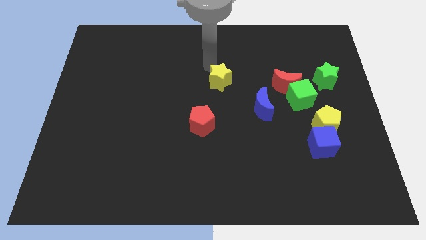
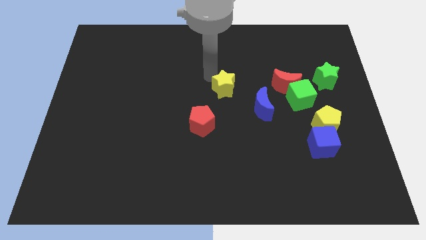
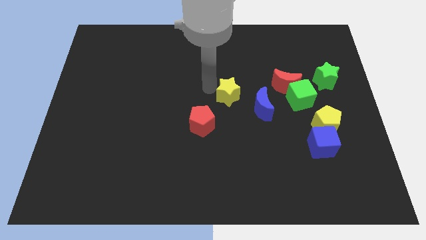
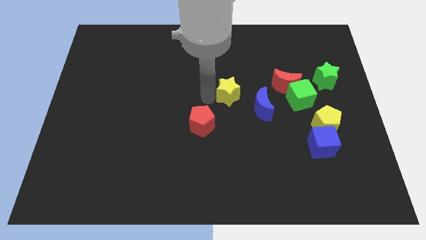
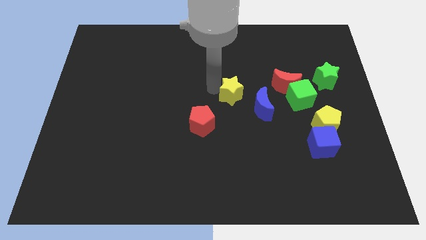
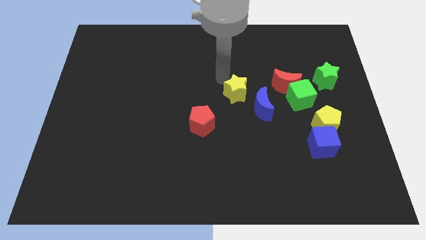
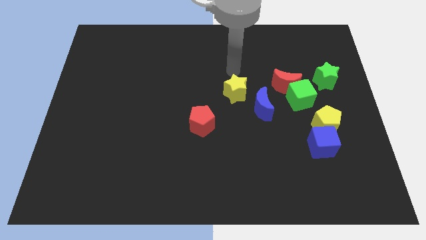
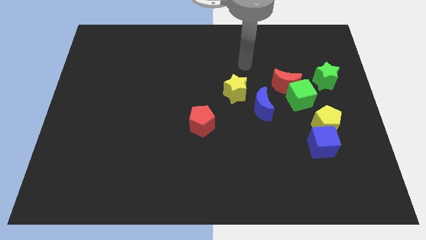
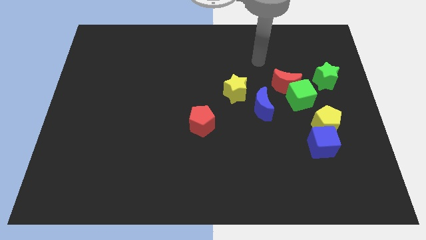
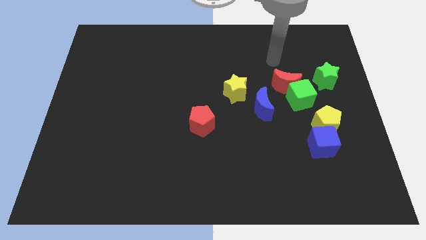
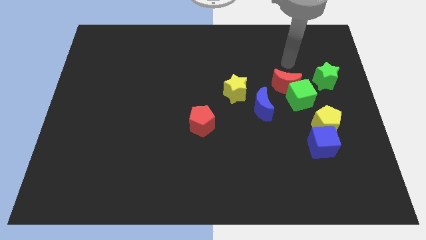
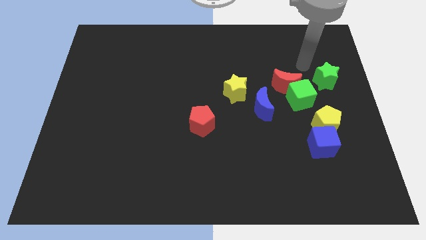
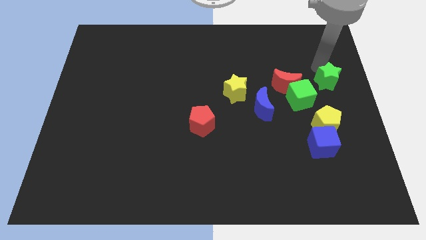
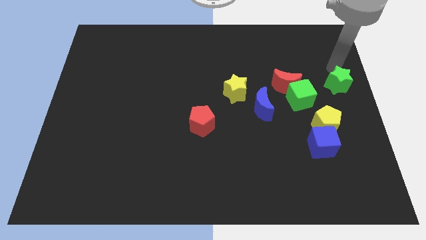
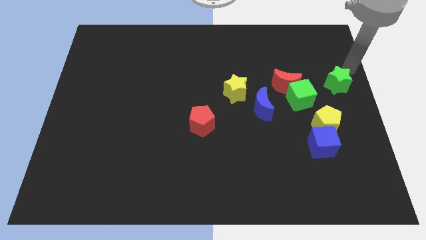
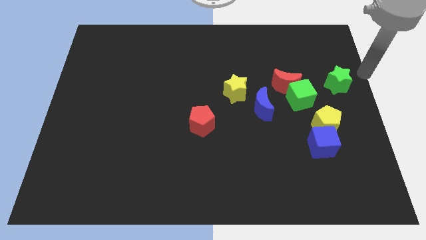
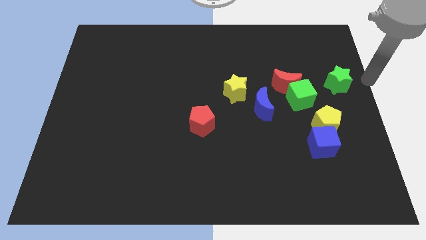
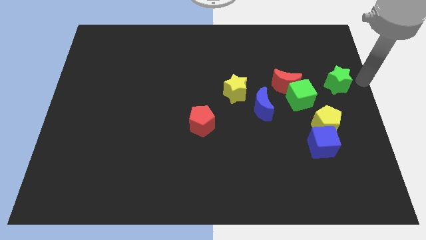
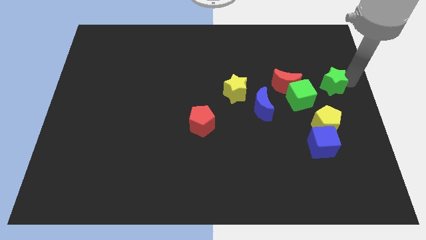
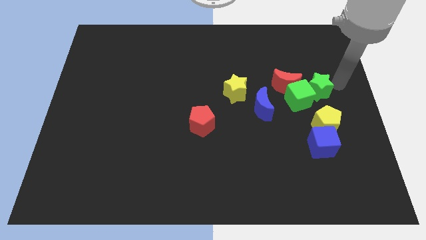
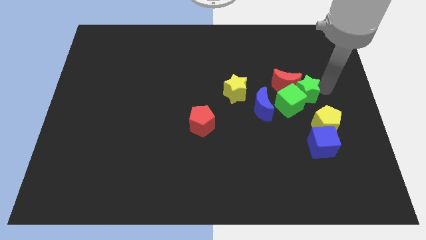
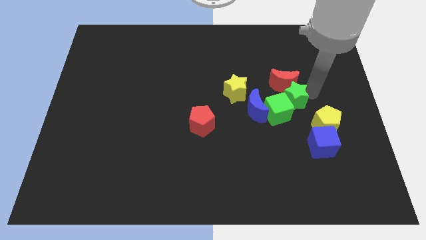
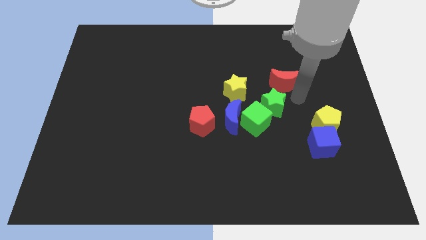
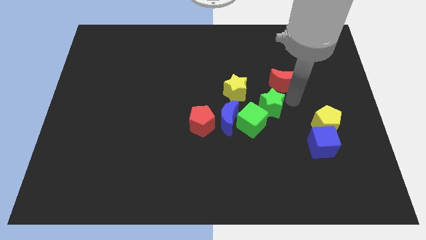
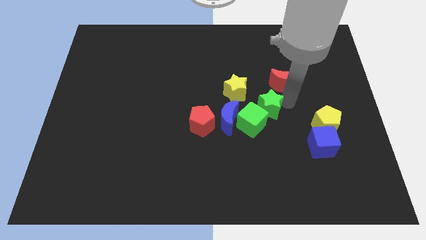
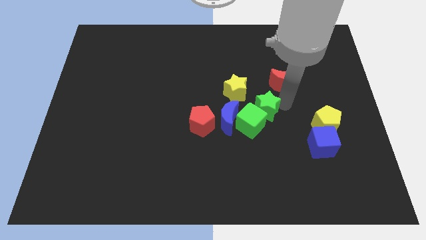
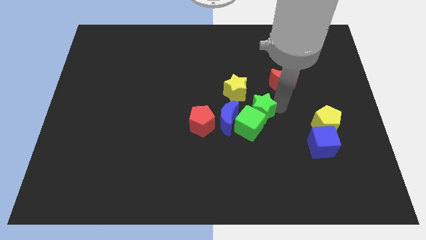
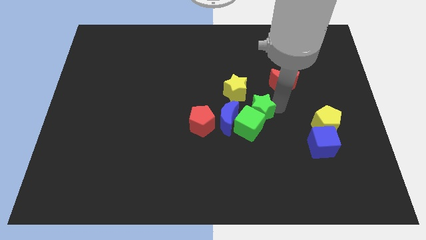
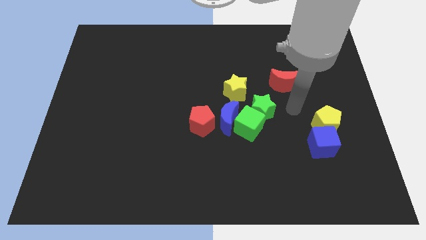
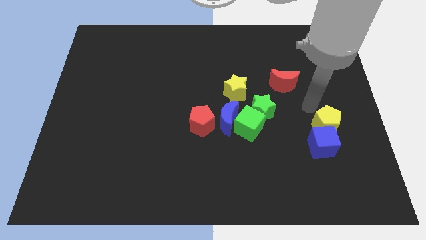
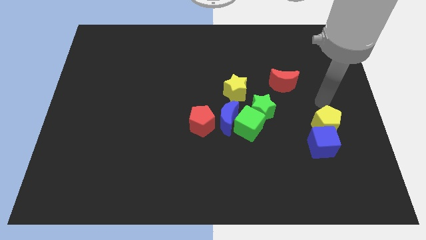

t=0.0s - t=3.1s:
push the green star into the green cube

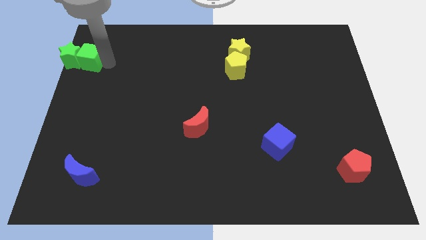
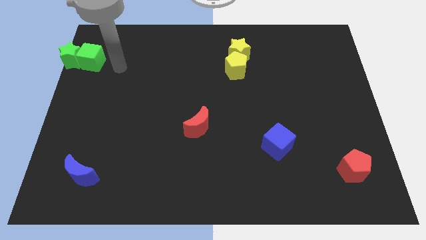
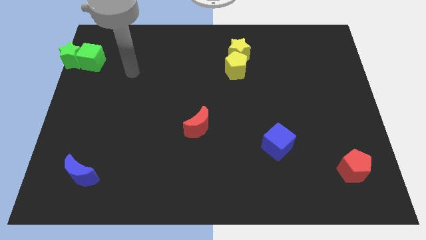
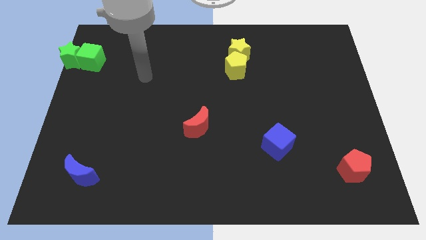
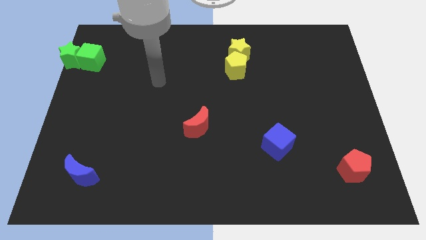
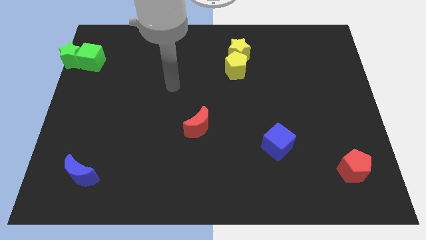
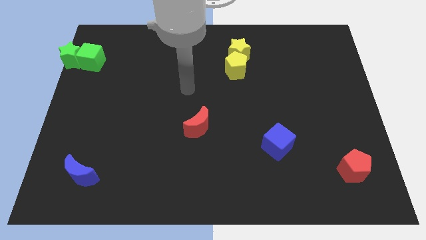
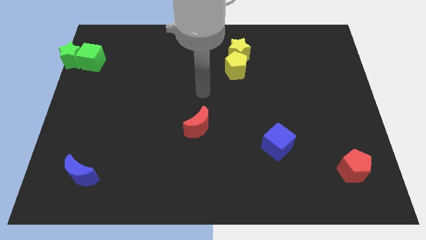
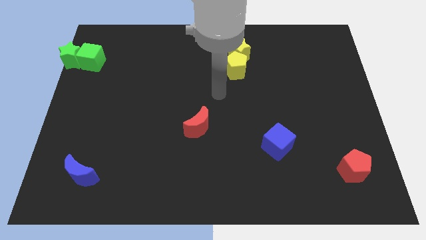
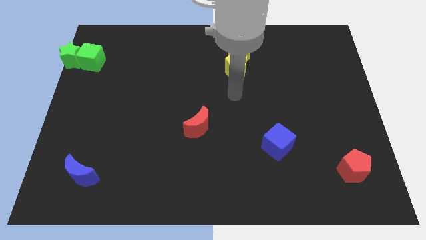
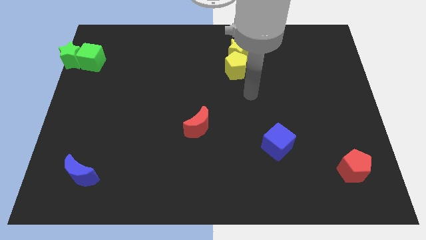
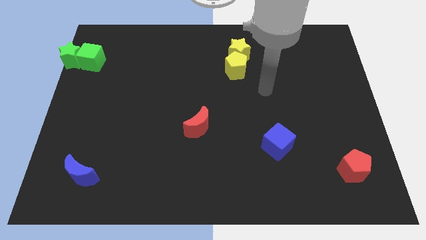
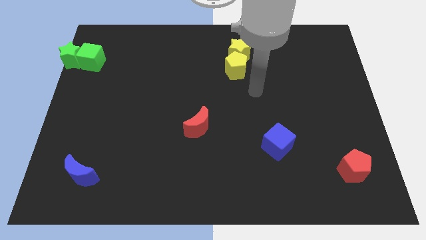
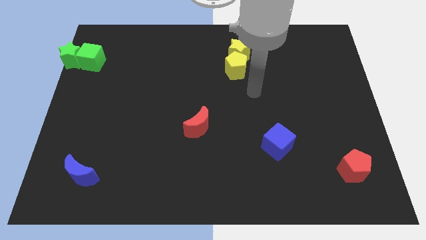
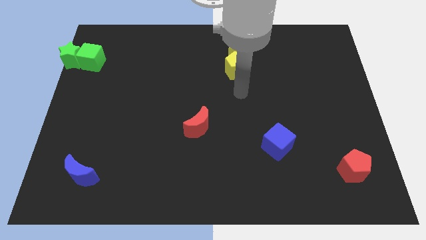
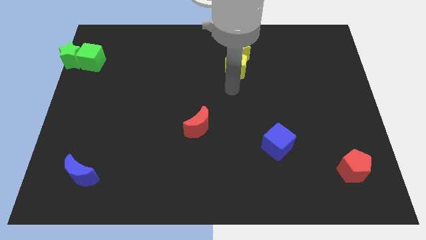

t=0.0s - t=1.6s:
point your arm at the bottom side of the yellow pentagon

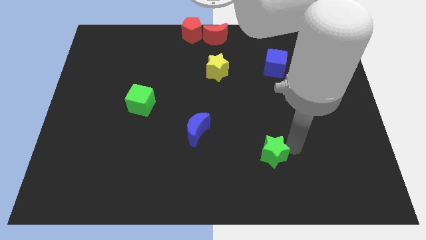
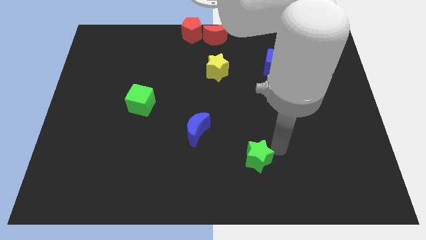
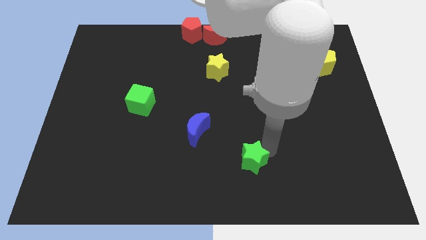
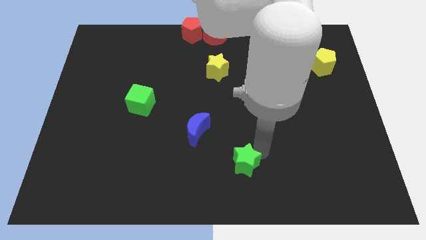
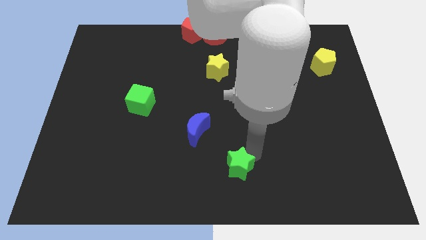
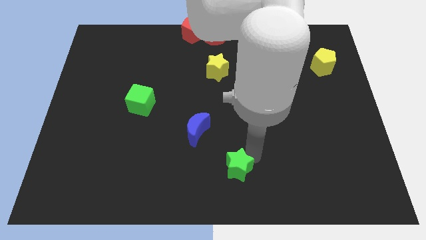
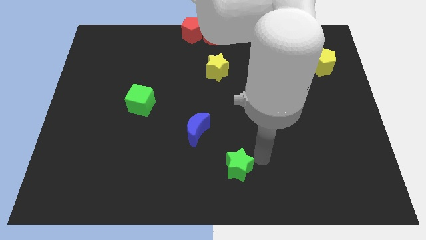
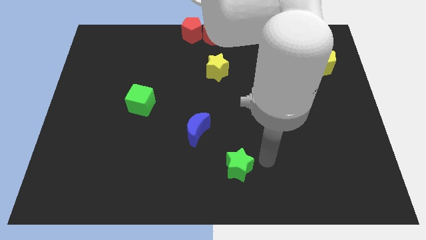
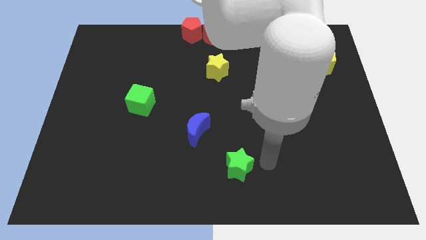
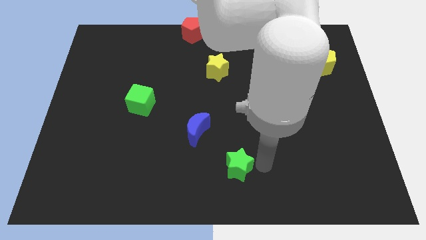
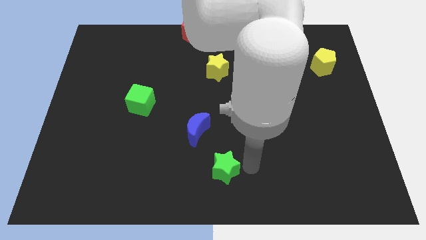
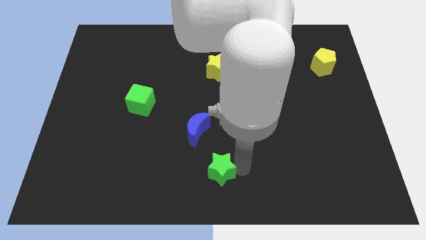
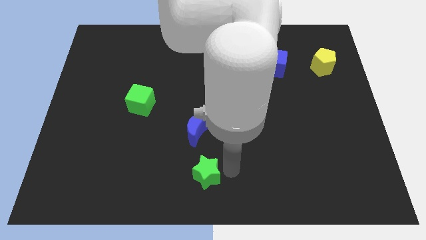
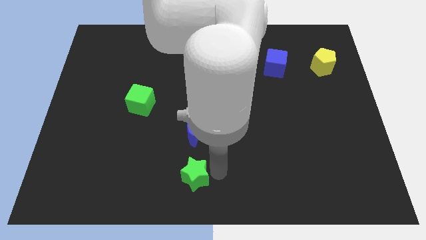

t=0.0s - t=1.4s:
place the green star to the bottom of blue moon

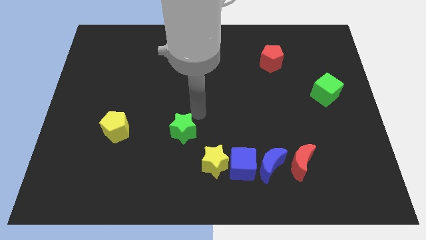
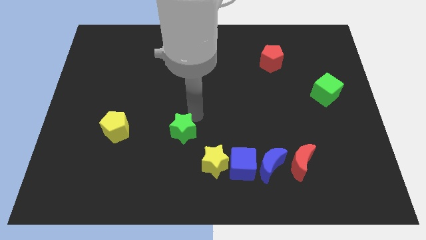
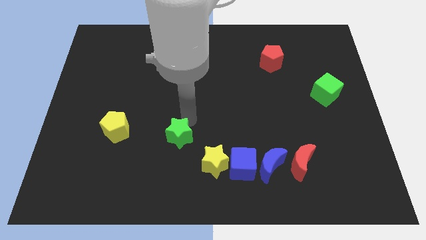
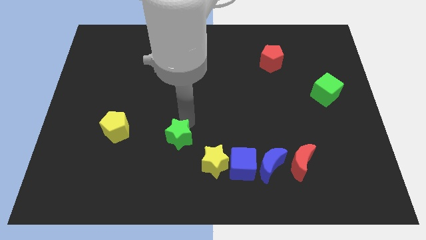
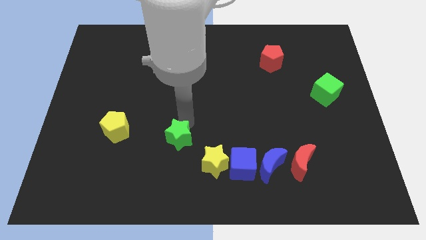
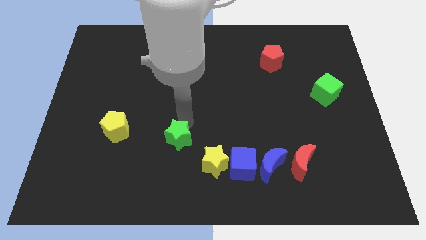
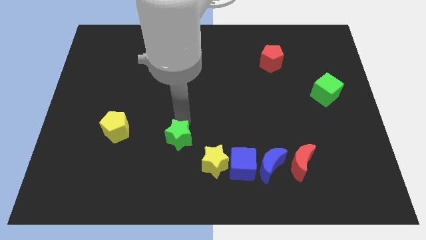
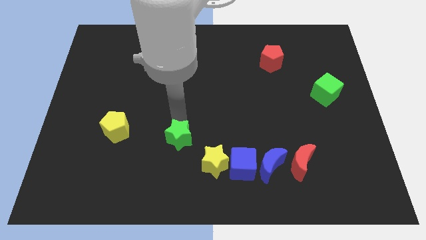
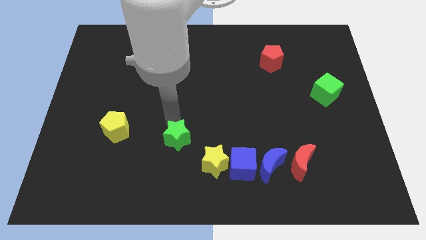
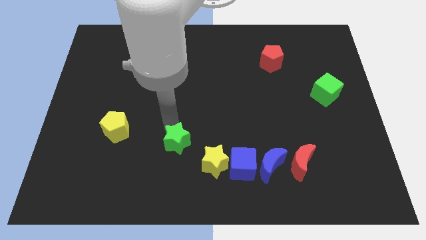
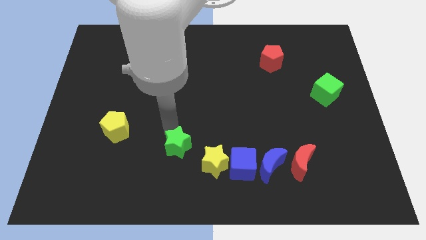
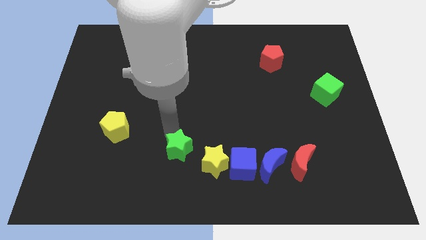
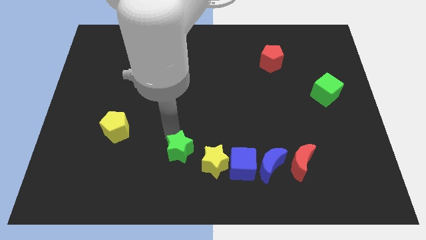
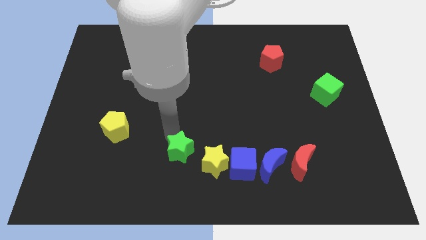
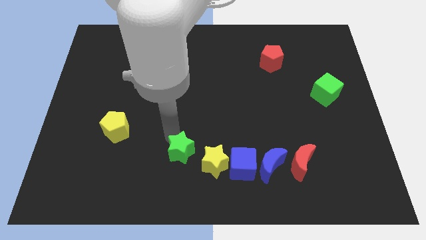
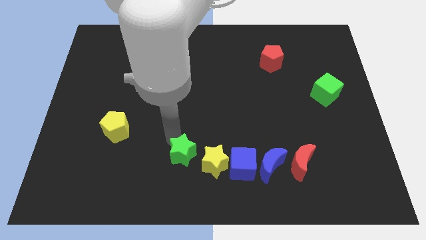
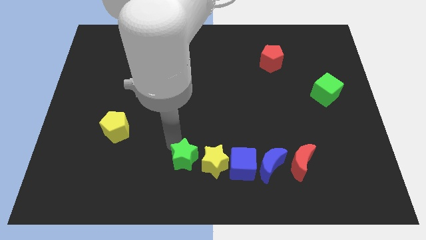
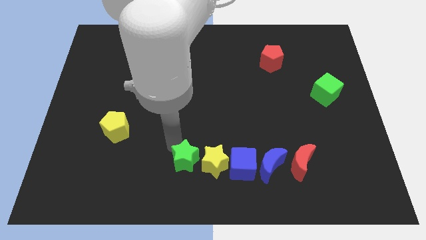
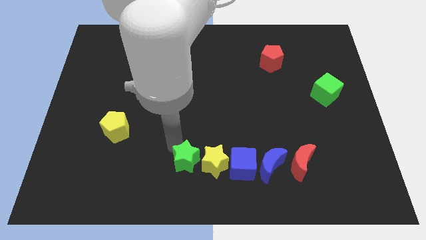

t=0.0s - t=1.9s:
push the green star close to the yellow star

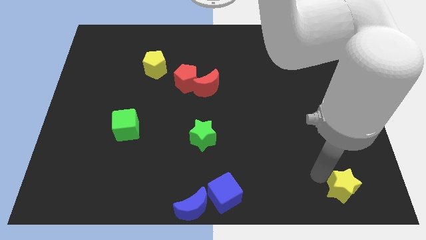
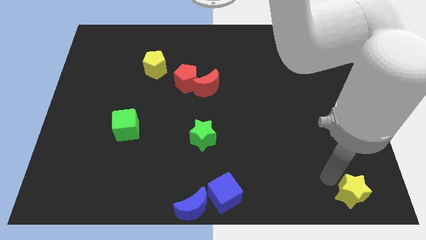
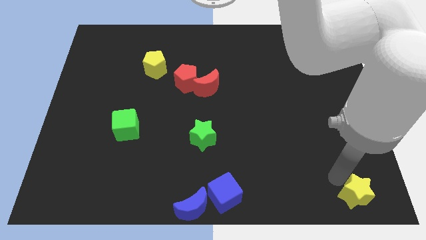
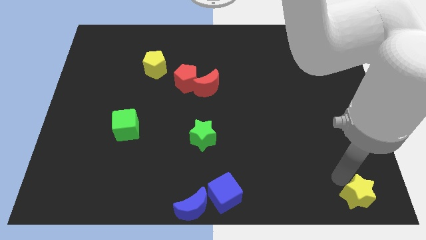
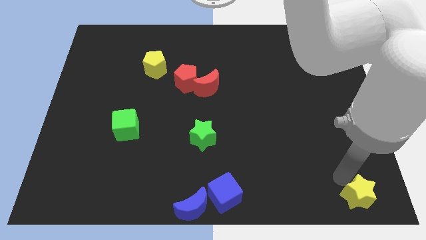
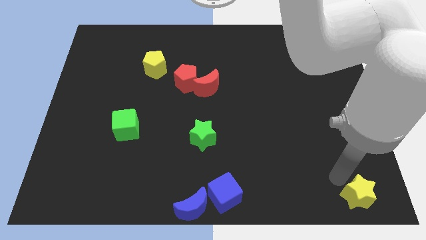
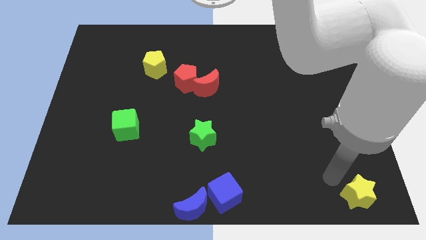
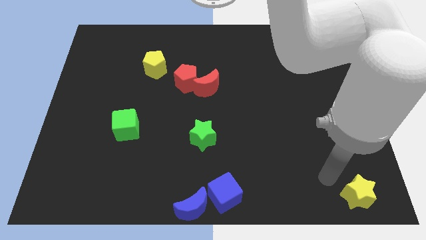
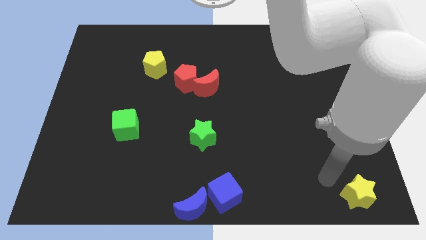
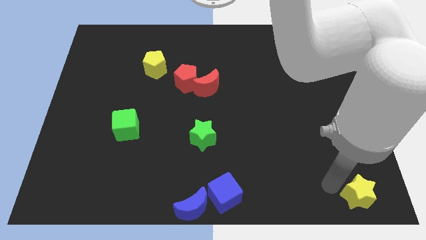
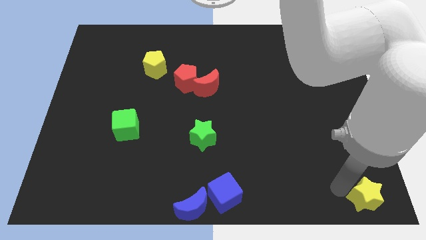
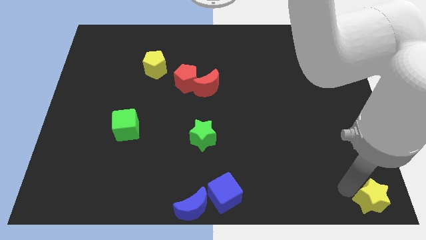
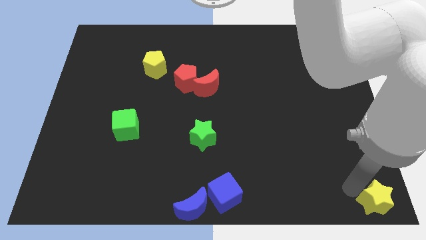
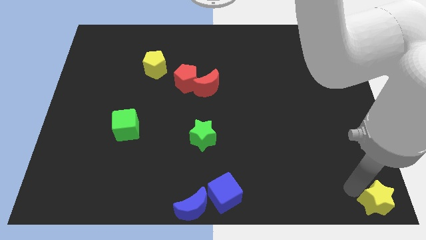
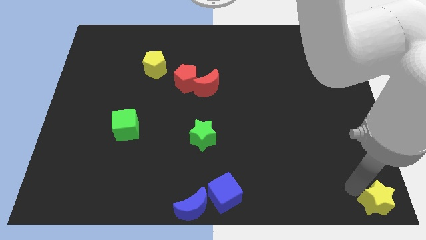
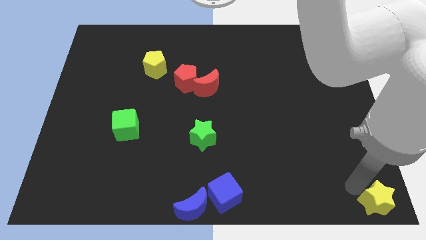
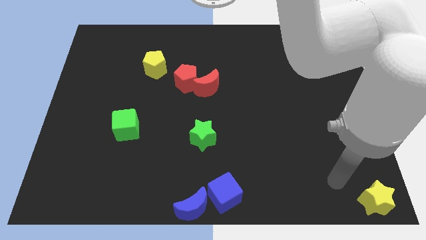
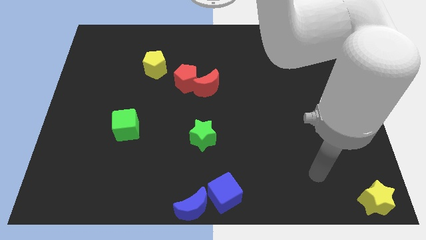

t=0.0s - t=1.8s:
push yellow star to the bottom right corner of the board
